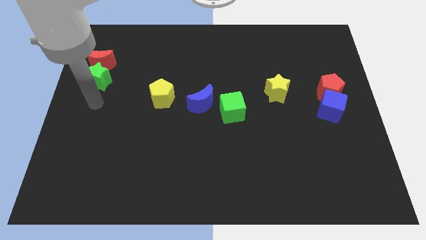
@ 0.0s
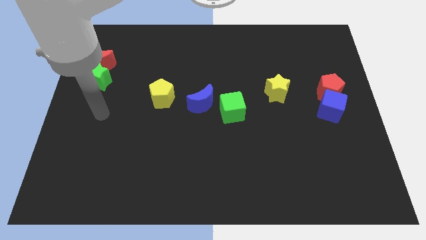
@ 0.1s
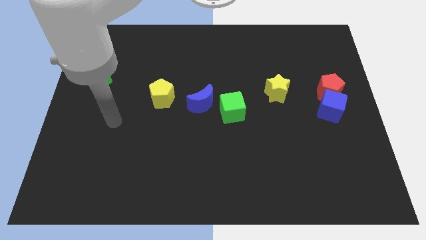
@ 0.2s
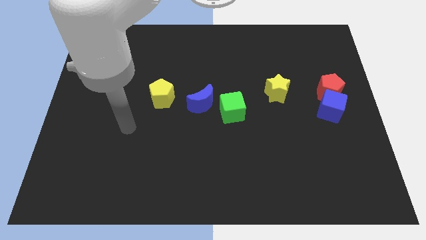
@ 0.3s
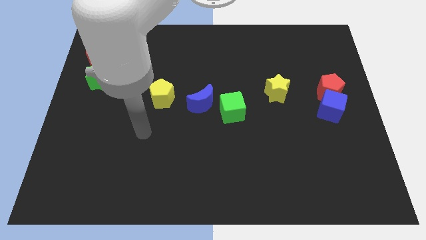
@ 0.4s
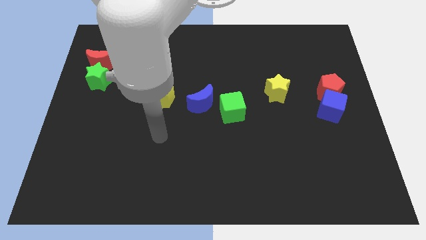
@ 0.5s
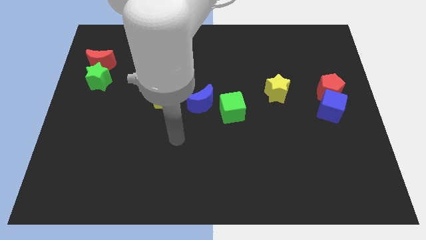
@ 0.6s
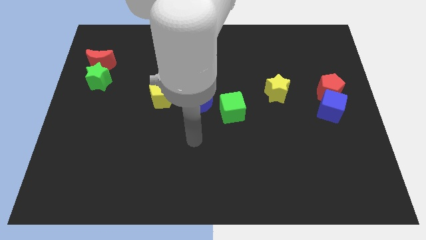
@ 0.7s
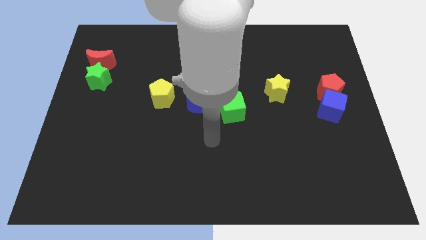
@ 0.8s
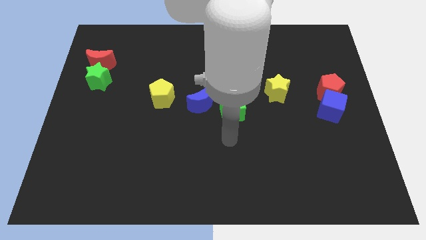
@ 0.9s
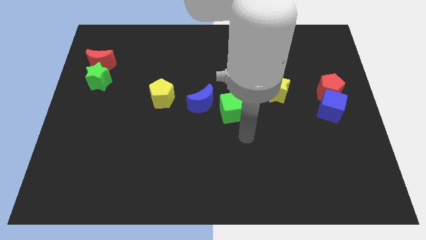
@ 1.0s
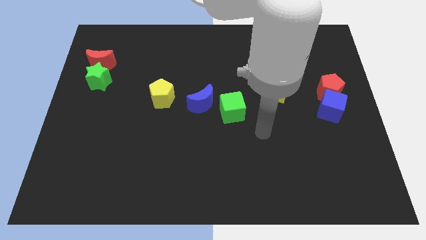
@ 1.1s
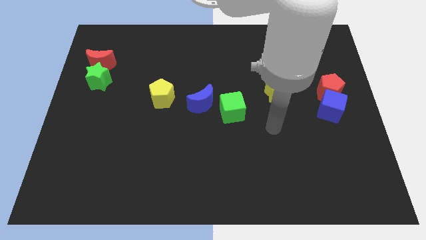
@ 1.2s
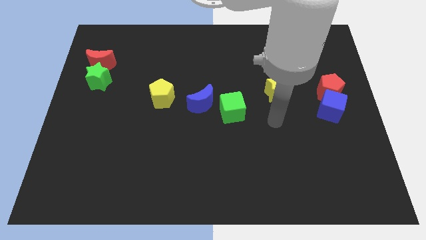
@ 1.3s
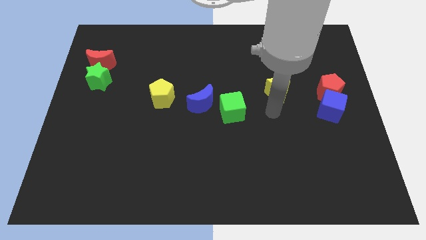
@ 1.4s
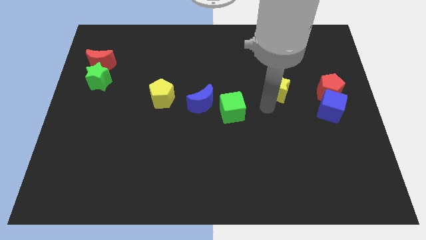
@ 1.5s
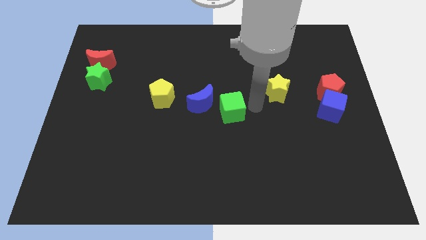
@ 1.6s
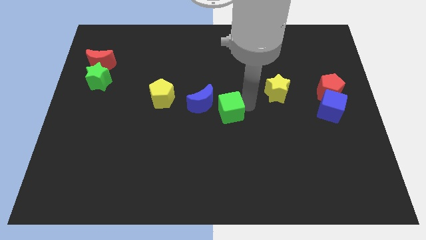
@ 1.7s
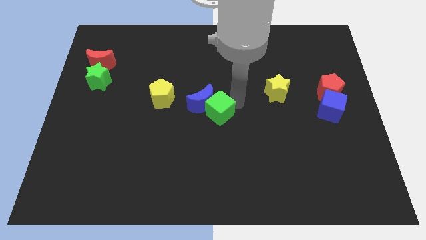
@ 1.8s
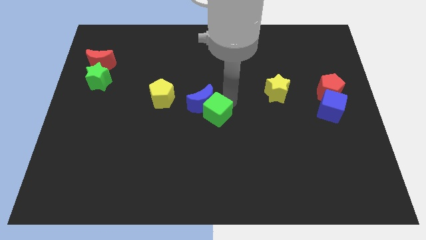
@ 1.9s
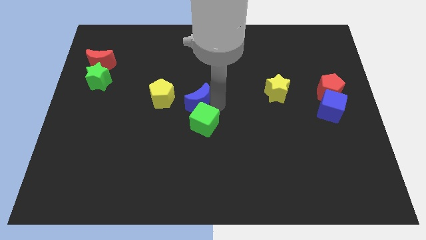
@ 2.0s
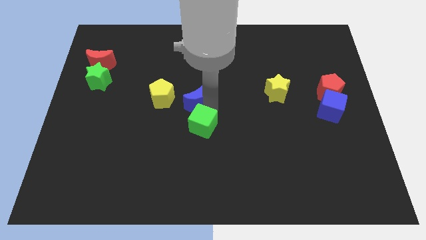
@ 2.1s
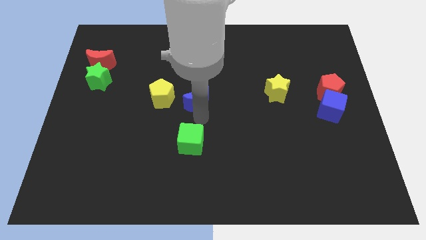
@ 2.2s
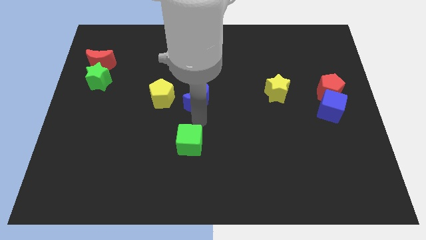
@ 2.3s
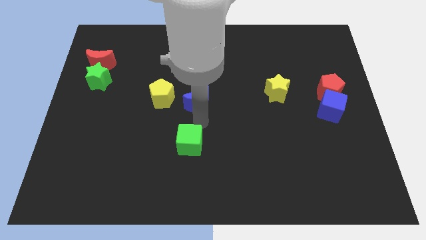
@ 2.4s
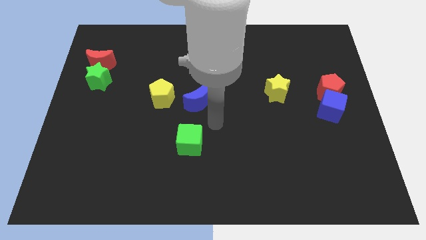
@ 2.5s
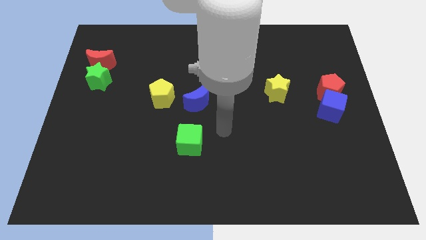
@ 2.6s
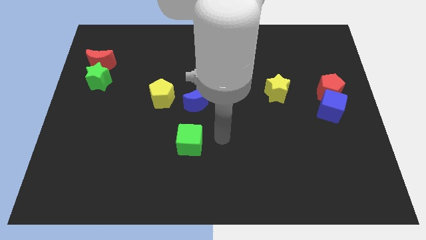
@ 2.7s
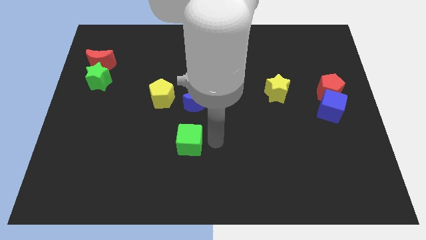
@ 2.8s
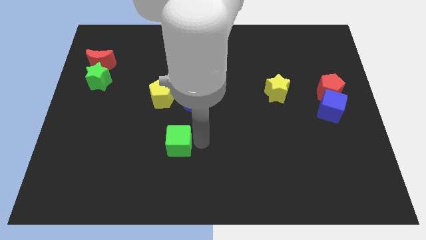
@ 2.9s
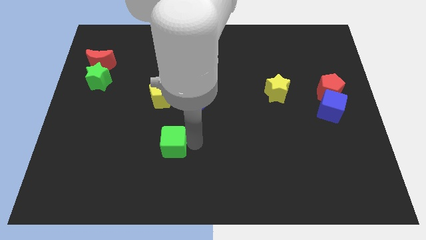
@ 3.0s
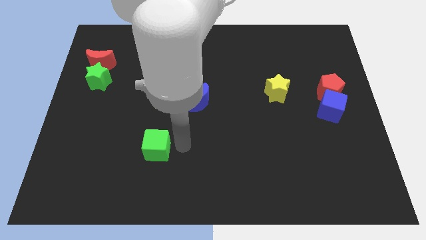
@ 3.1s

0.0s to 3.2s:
place green cube below yellow pentagon

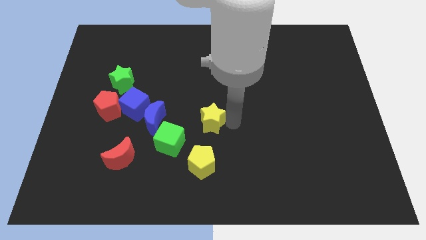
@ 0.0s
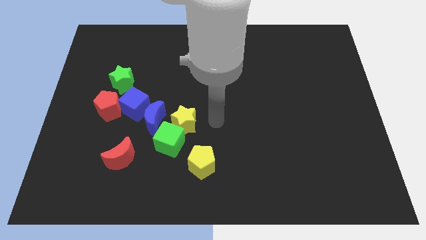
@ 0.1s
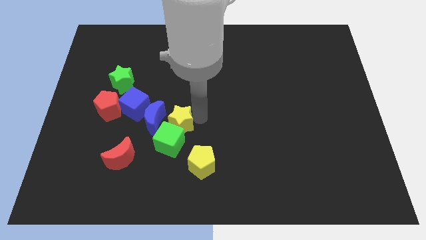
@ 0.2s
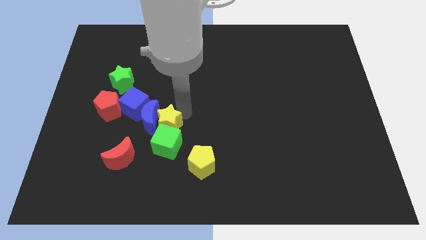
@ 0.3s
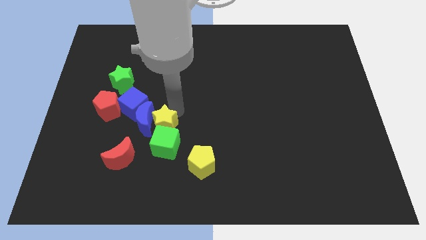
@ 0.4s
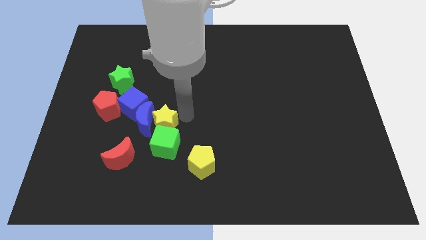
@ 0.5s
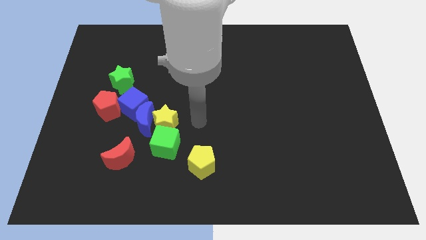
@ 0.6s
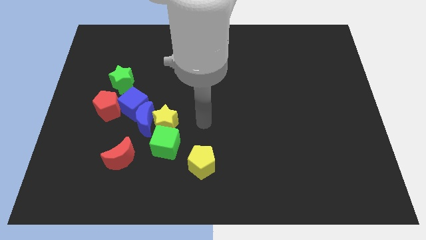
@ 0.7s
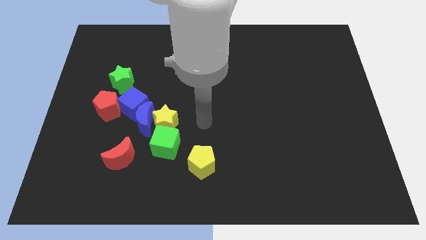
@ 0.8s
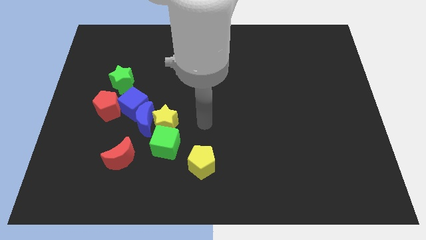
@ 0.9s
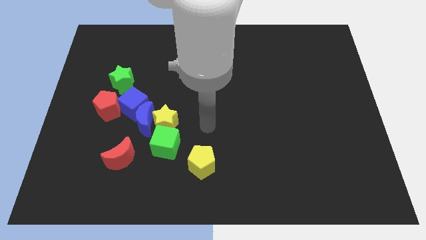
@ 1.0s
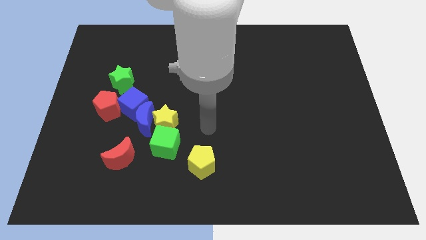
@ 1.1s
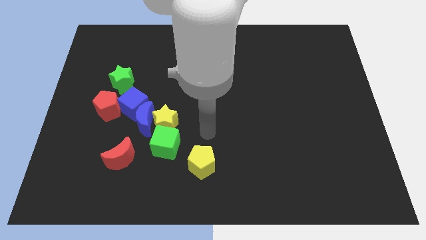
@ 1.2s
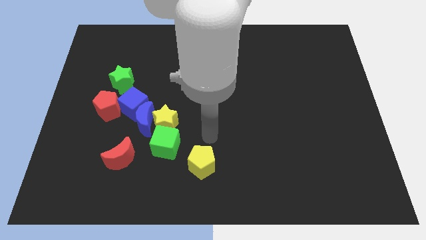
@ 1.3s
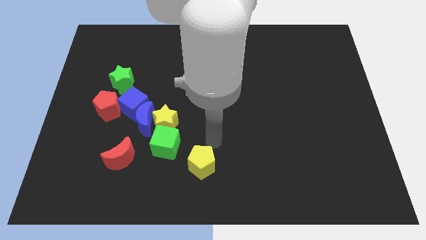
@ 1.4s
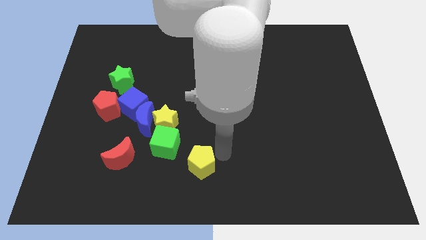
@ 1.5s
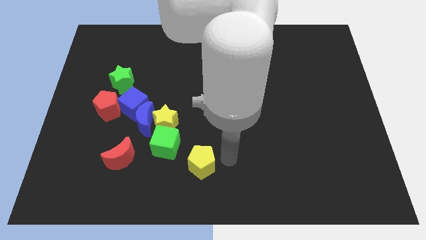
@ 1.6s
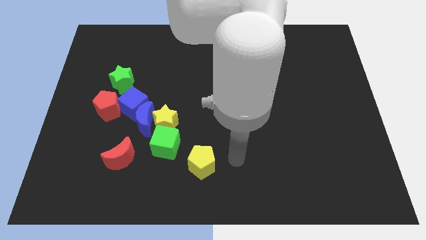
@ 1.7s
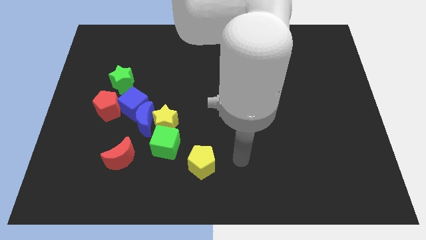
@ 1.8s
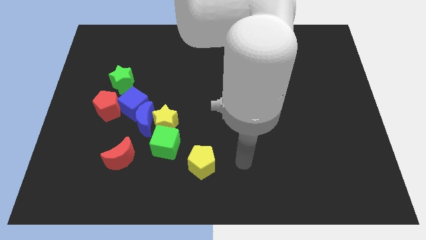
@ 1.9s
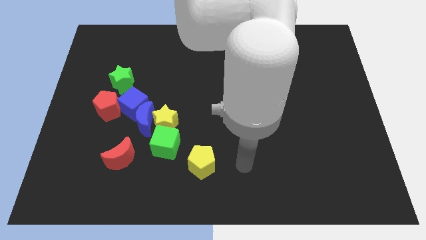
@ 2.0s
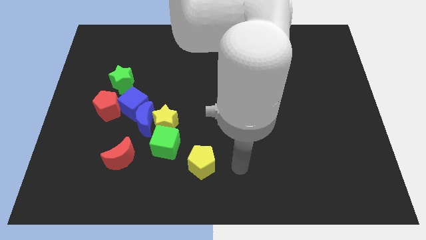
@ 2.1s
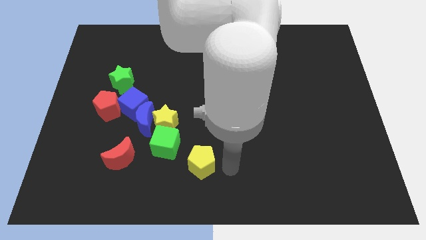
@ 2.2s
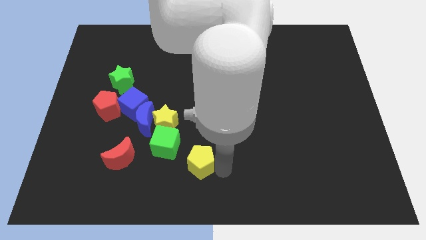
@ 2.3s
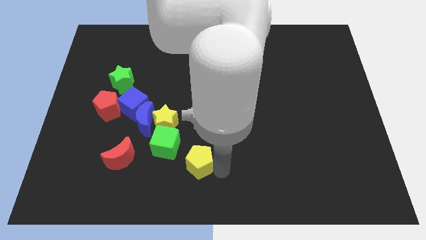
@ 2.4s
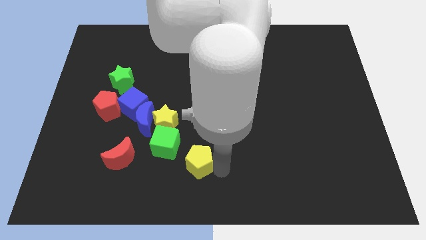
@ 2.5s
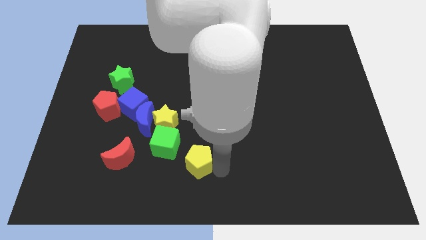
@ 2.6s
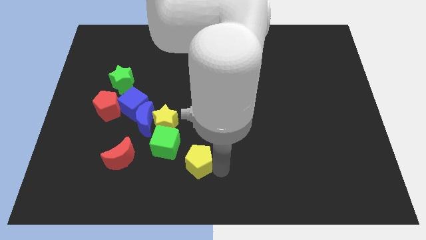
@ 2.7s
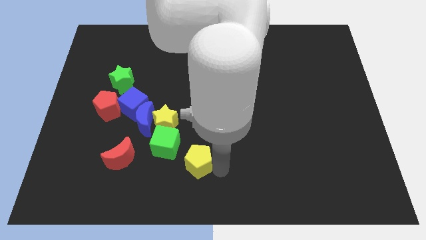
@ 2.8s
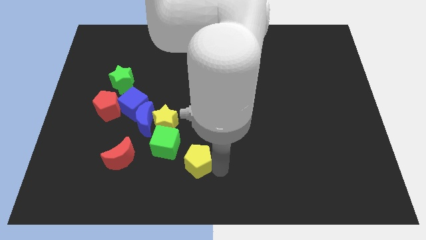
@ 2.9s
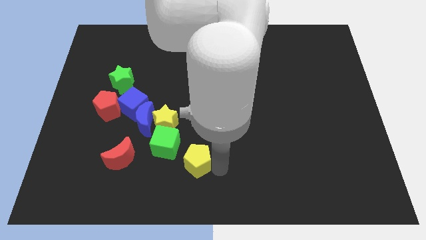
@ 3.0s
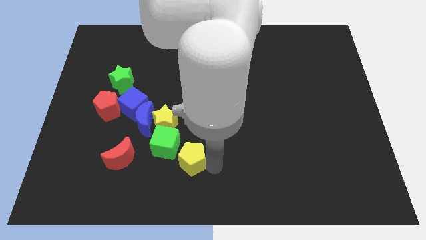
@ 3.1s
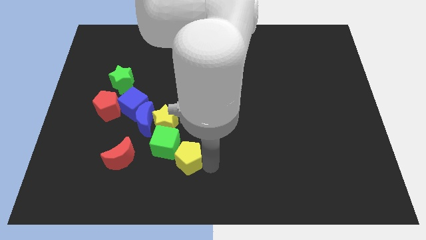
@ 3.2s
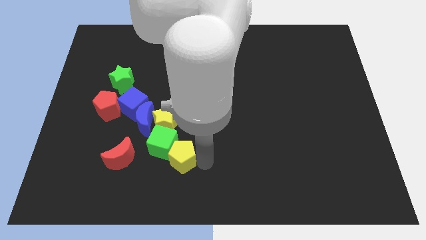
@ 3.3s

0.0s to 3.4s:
slide the yellow star and the yellow pentagon into the green cube

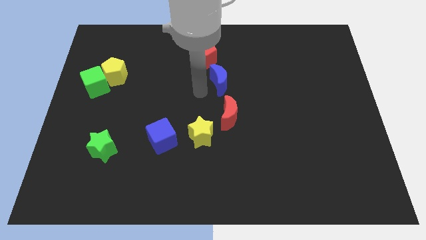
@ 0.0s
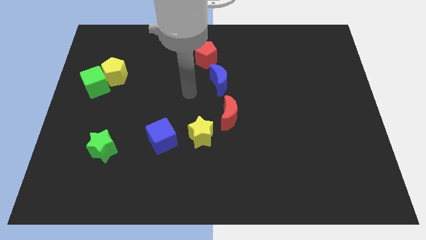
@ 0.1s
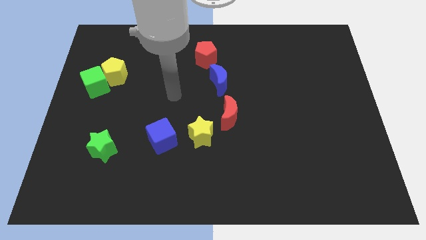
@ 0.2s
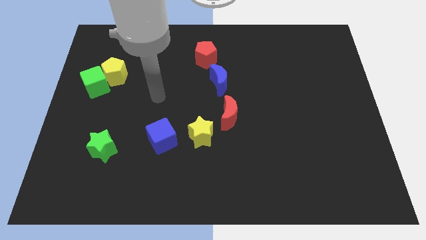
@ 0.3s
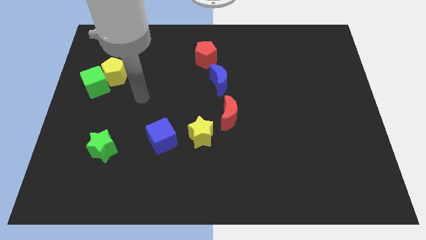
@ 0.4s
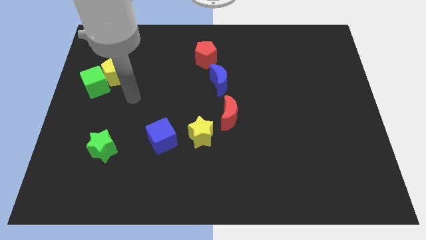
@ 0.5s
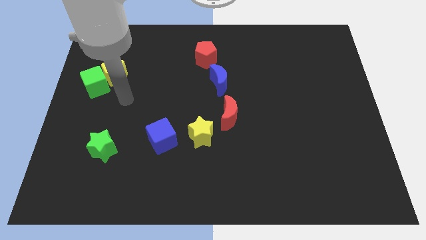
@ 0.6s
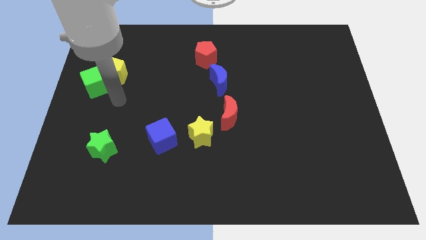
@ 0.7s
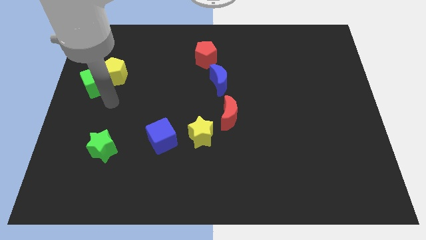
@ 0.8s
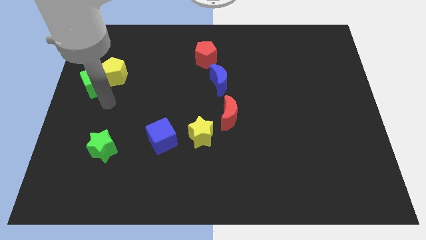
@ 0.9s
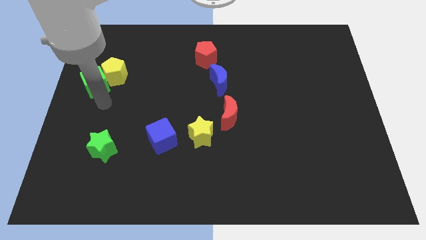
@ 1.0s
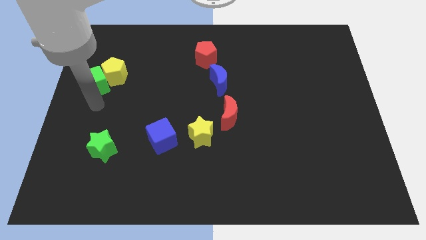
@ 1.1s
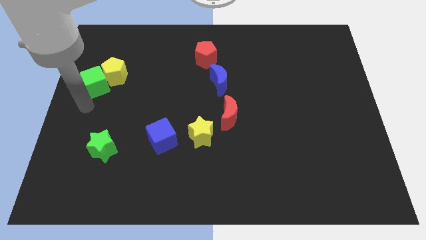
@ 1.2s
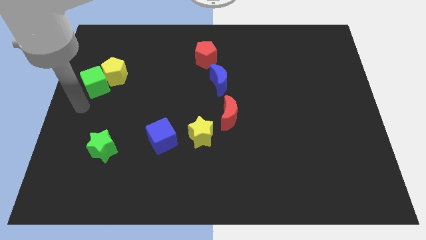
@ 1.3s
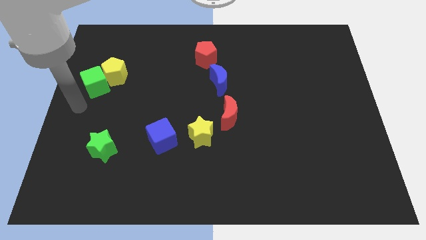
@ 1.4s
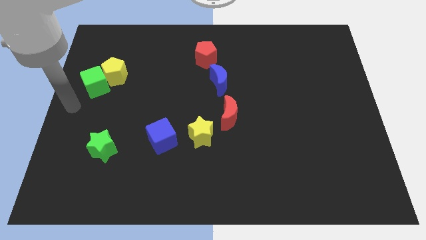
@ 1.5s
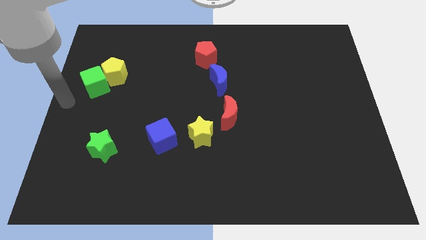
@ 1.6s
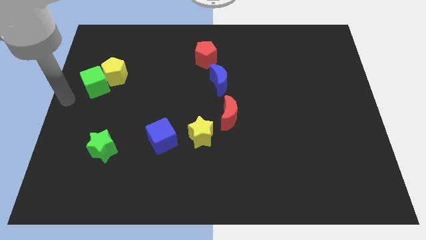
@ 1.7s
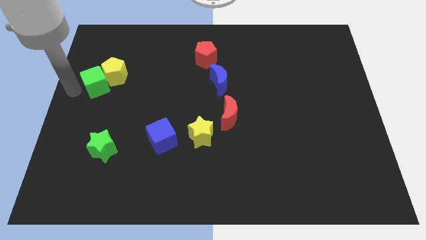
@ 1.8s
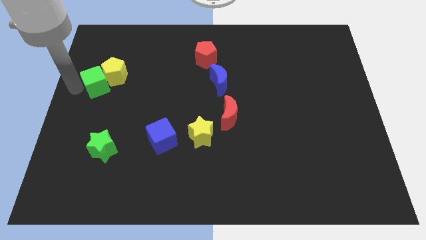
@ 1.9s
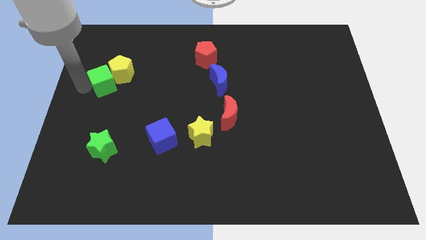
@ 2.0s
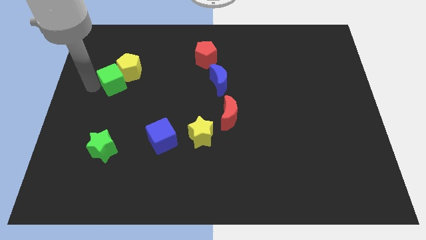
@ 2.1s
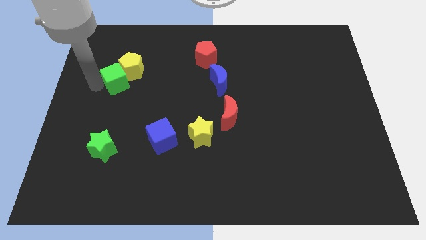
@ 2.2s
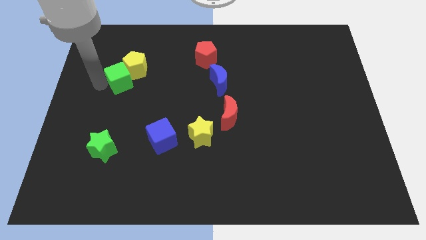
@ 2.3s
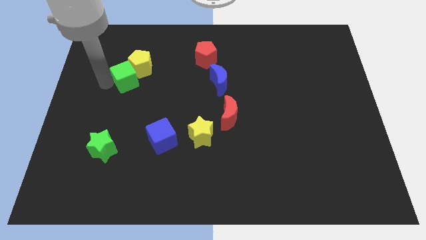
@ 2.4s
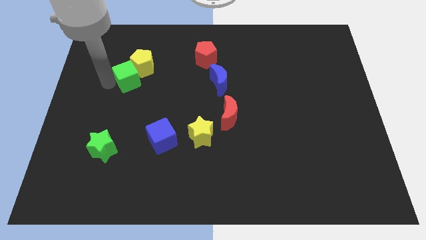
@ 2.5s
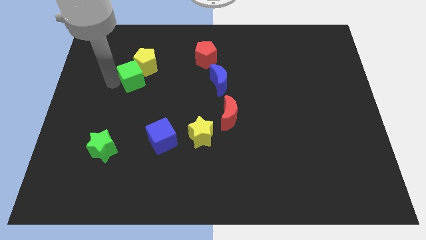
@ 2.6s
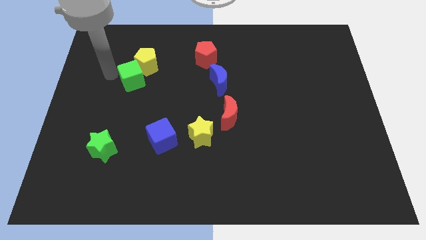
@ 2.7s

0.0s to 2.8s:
move green cube and yellow pentagon to the left
